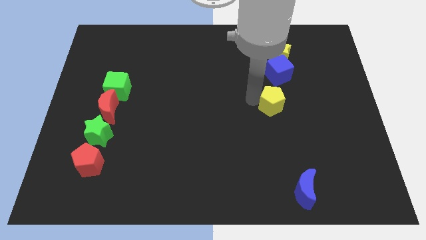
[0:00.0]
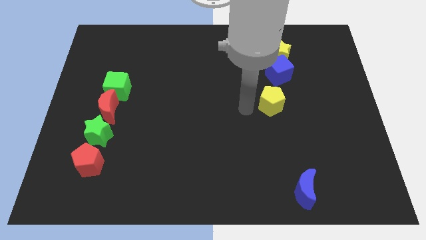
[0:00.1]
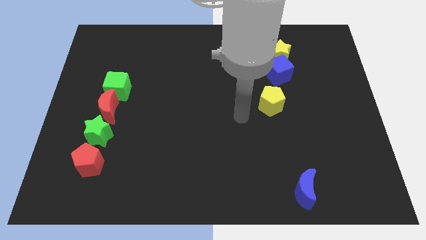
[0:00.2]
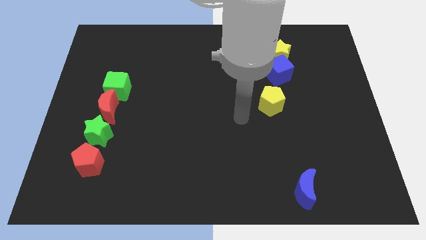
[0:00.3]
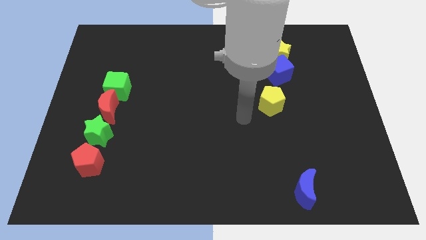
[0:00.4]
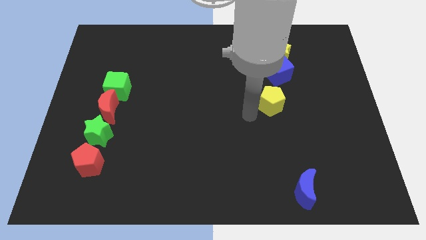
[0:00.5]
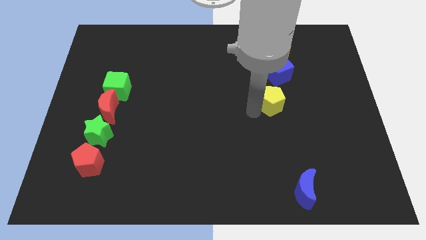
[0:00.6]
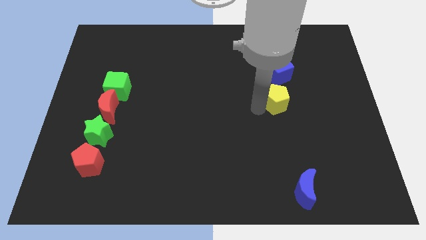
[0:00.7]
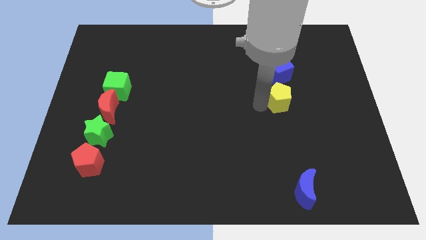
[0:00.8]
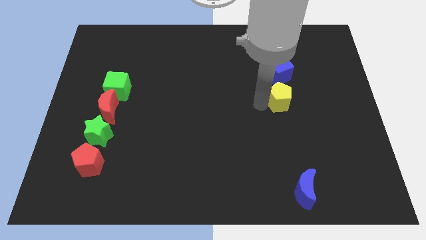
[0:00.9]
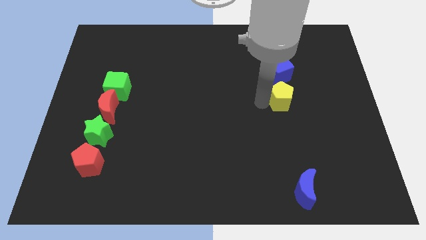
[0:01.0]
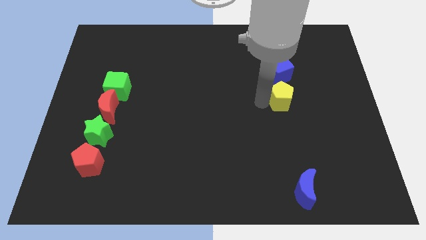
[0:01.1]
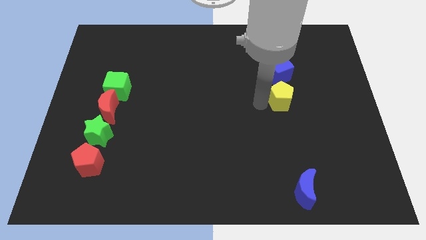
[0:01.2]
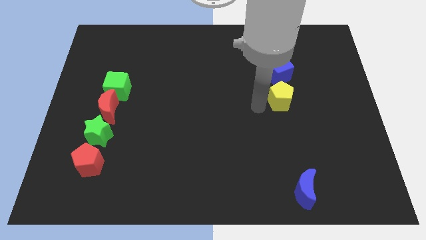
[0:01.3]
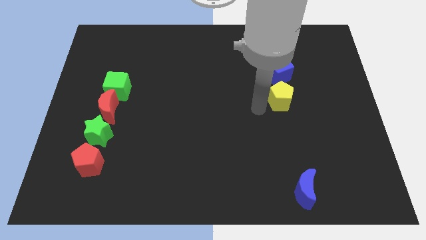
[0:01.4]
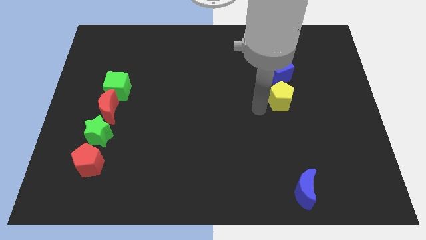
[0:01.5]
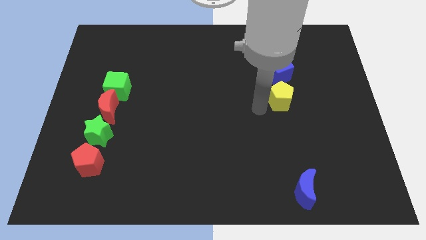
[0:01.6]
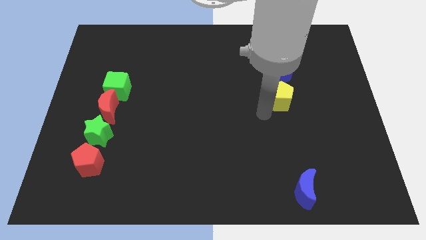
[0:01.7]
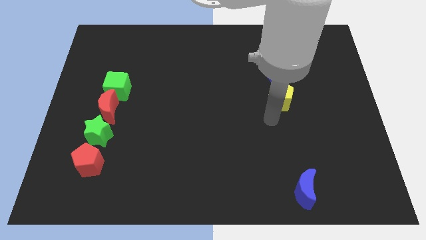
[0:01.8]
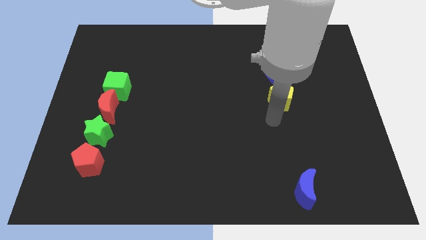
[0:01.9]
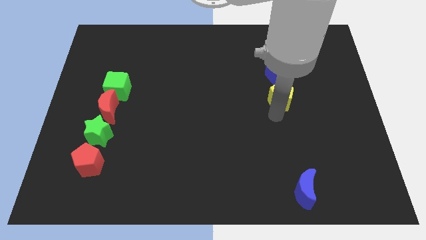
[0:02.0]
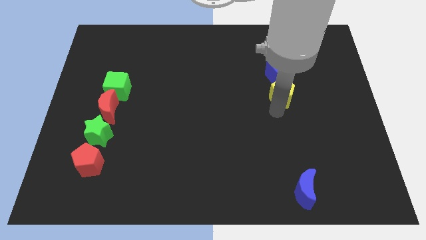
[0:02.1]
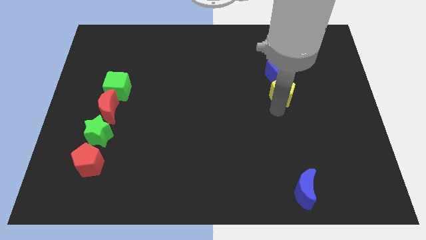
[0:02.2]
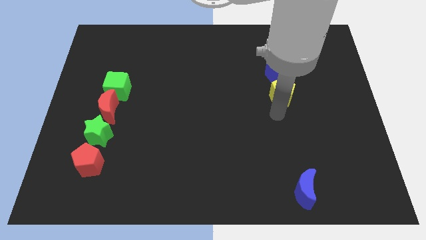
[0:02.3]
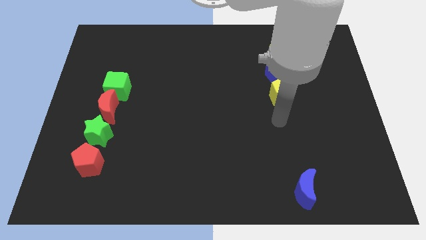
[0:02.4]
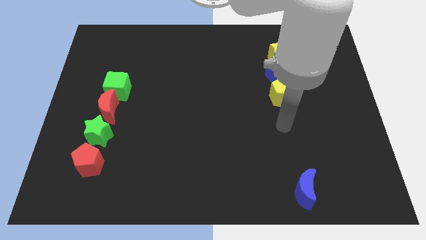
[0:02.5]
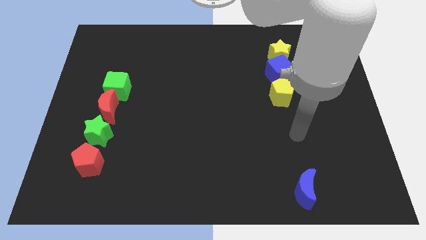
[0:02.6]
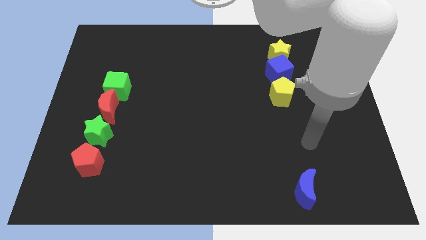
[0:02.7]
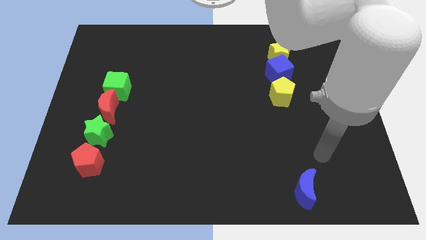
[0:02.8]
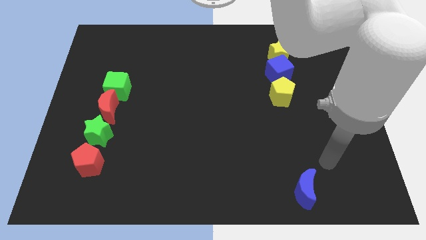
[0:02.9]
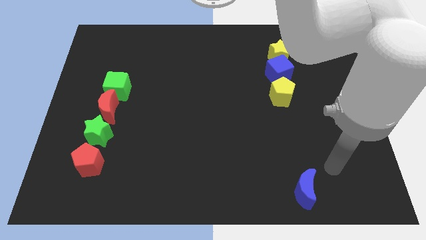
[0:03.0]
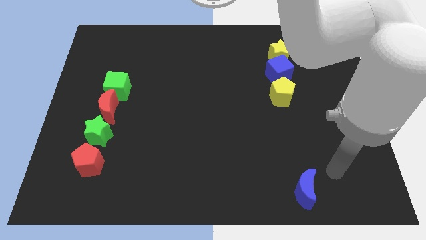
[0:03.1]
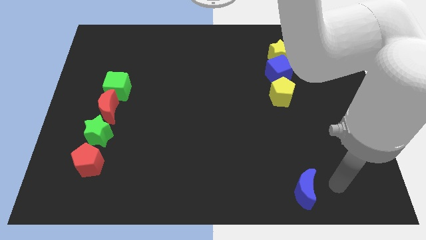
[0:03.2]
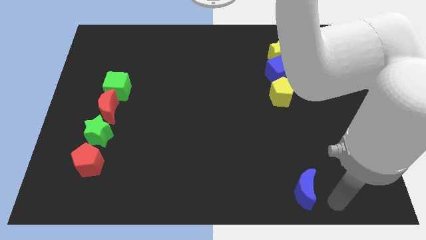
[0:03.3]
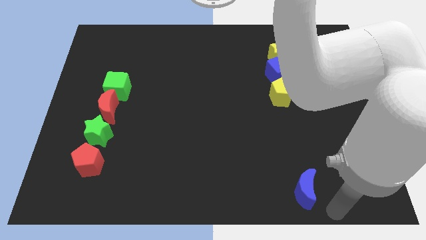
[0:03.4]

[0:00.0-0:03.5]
slide the yellow pentagon close to the blue cube

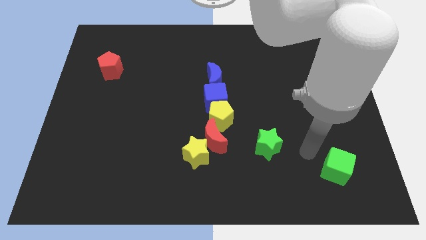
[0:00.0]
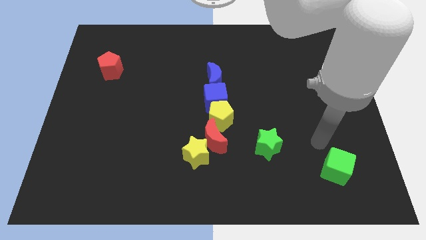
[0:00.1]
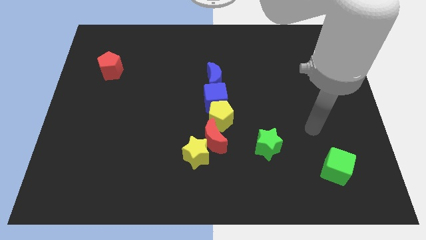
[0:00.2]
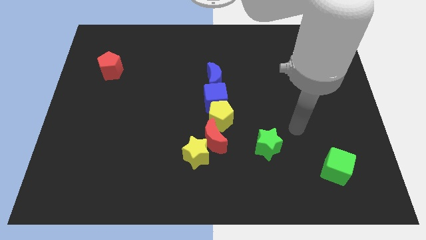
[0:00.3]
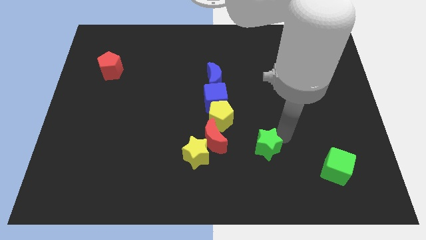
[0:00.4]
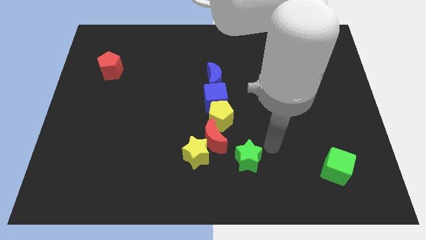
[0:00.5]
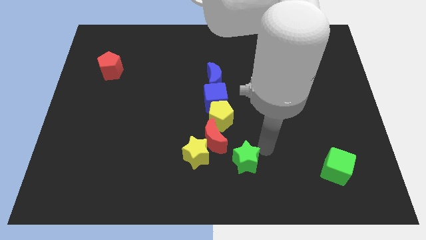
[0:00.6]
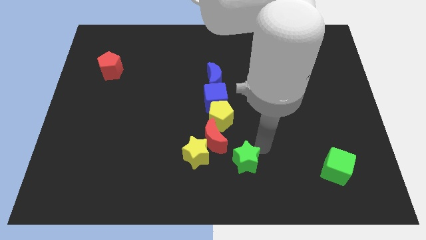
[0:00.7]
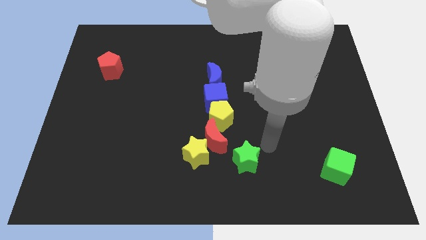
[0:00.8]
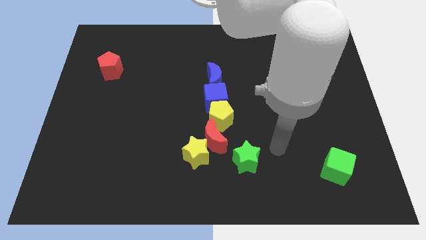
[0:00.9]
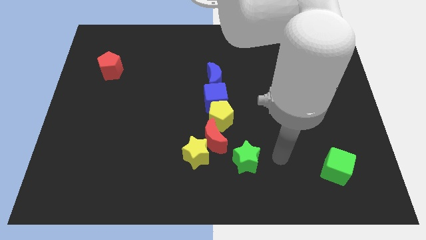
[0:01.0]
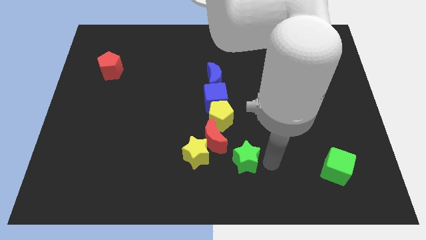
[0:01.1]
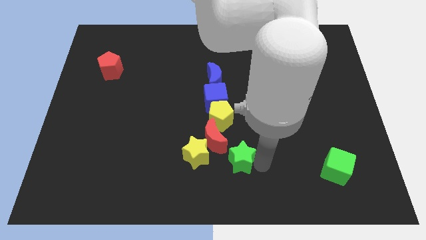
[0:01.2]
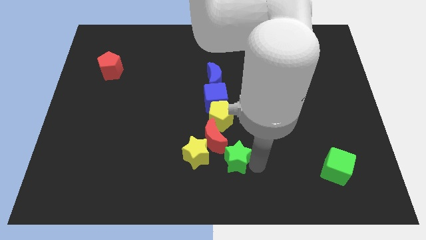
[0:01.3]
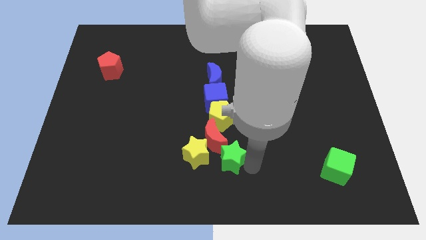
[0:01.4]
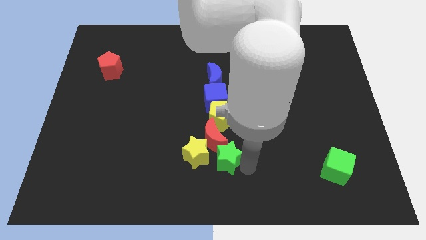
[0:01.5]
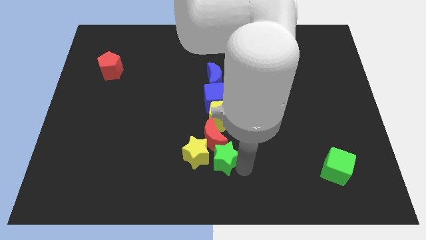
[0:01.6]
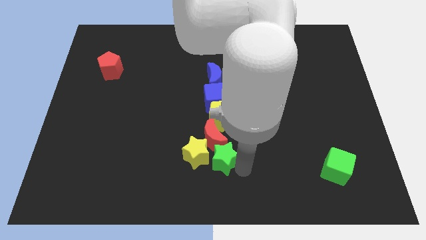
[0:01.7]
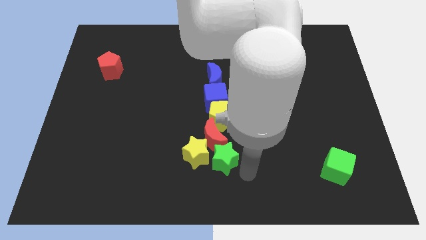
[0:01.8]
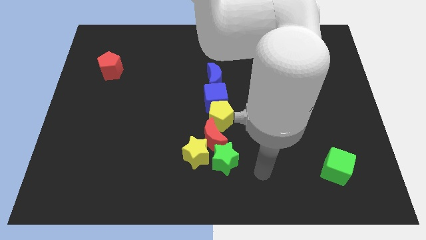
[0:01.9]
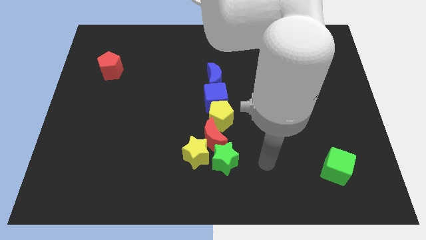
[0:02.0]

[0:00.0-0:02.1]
put the green star below right to red crescent

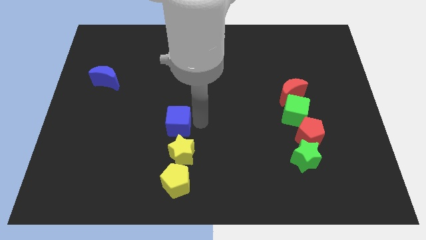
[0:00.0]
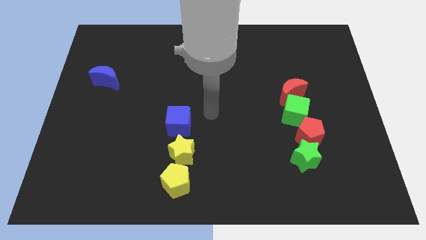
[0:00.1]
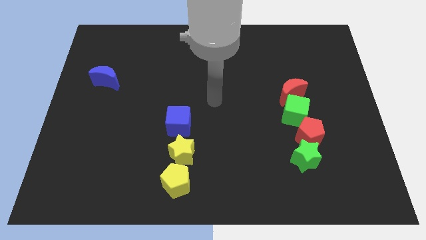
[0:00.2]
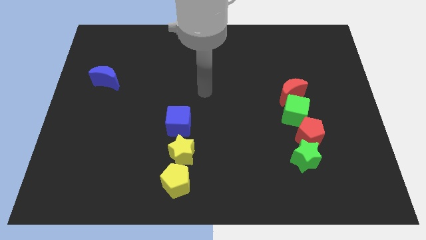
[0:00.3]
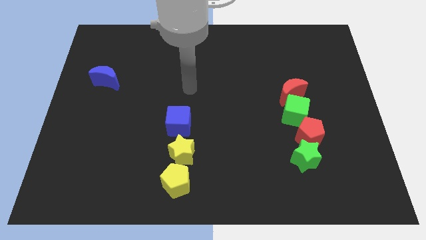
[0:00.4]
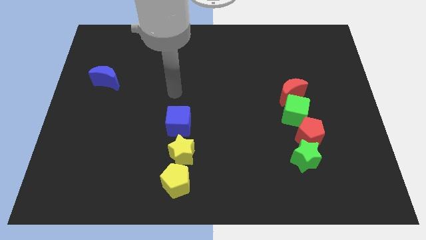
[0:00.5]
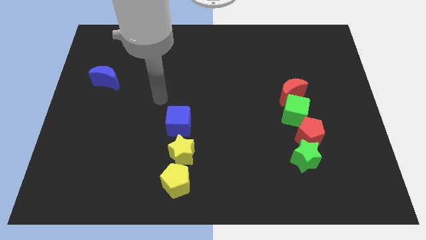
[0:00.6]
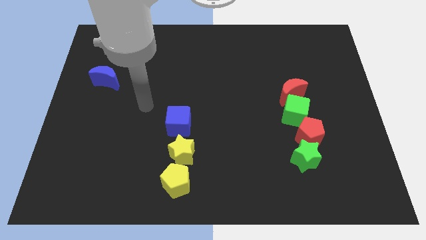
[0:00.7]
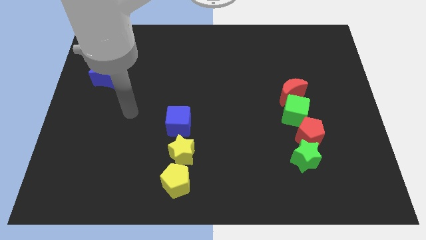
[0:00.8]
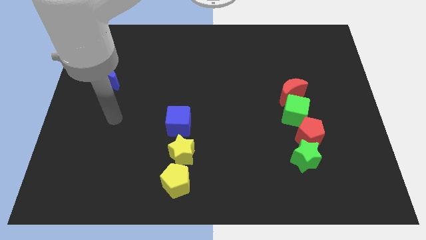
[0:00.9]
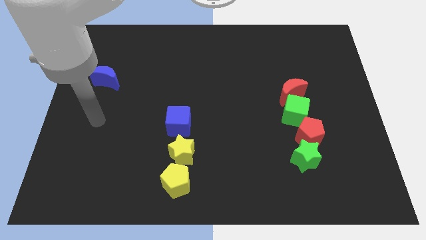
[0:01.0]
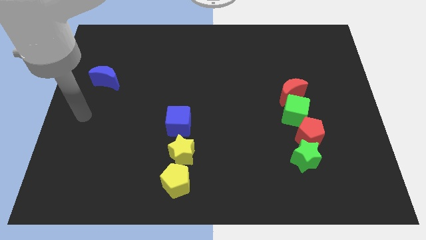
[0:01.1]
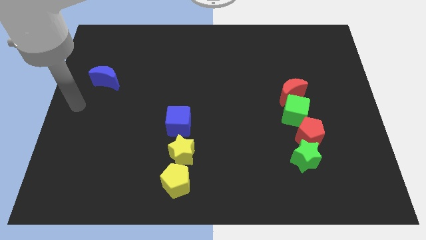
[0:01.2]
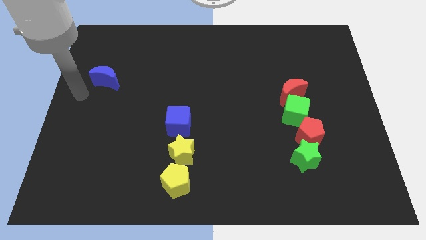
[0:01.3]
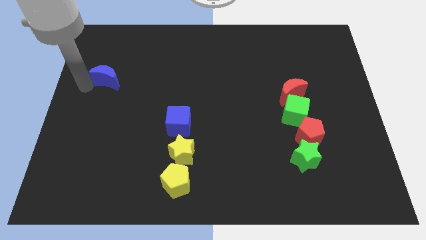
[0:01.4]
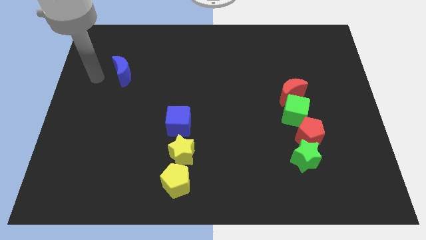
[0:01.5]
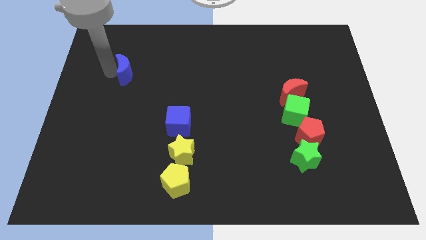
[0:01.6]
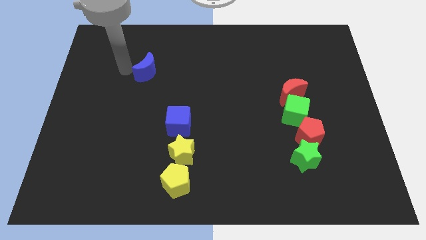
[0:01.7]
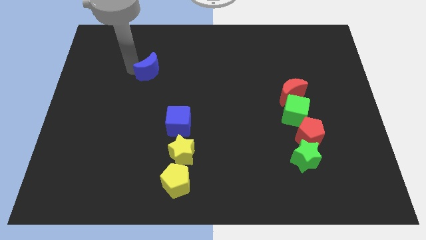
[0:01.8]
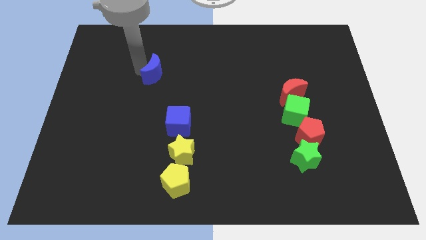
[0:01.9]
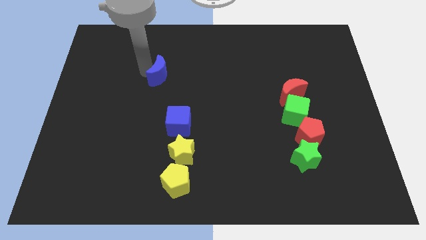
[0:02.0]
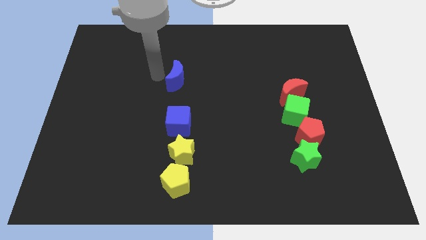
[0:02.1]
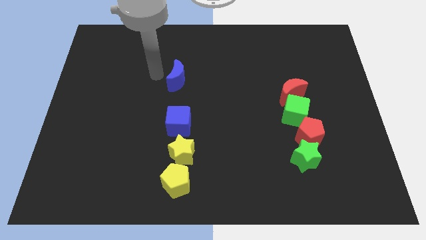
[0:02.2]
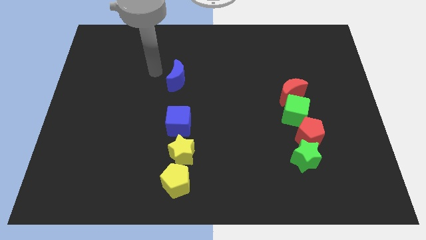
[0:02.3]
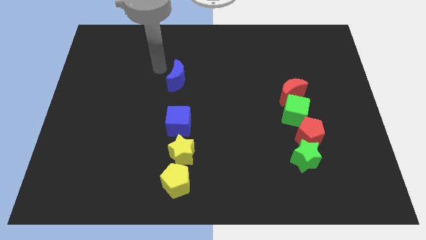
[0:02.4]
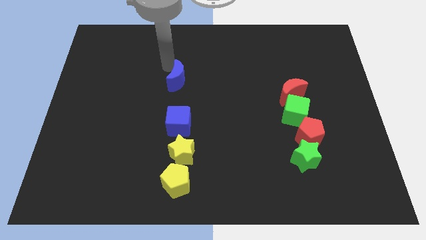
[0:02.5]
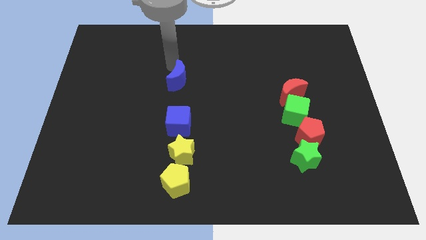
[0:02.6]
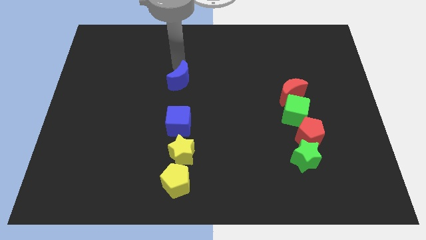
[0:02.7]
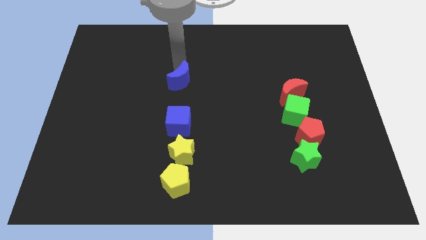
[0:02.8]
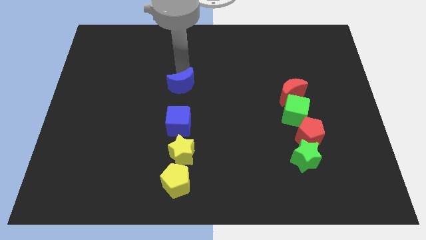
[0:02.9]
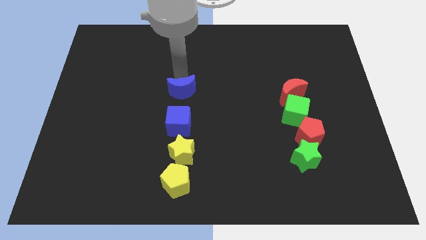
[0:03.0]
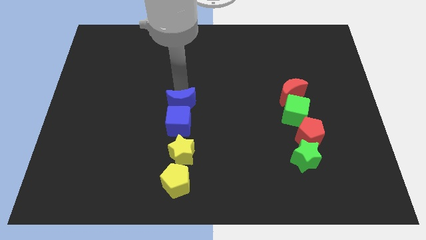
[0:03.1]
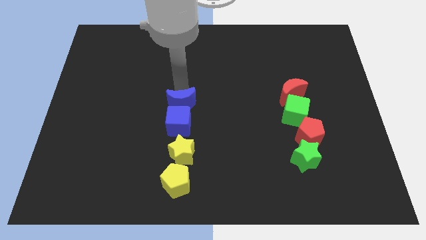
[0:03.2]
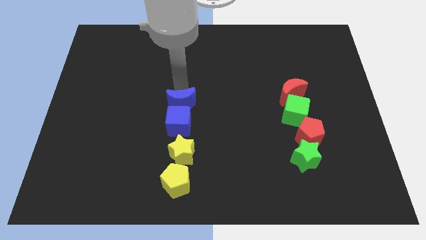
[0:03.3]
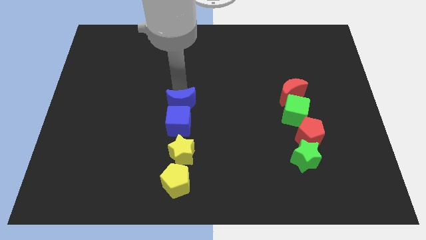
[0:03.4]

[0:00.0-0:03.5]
place blue moon to the top of blue cube
